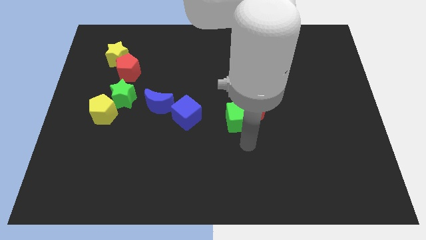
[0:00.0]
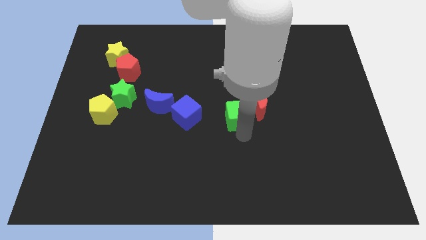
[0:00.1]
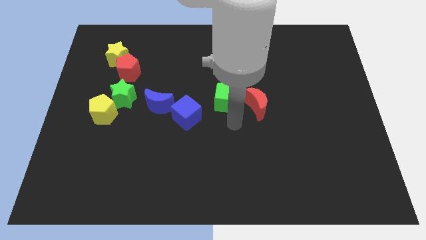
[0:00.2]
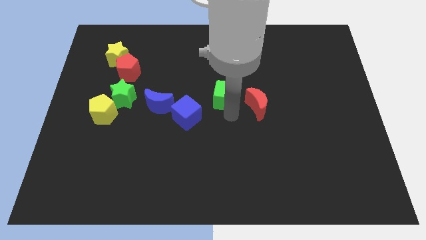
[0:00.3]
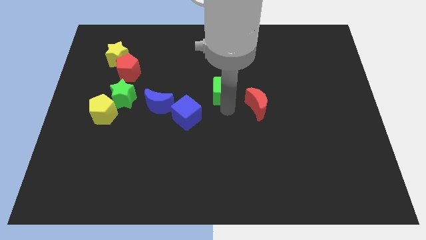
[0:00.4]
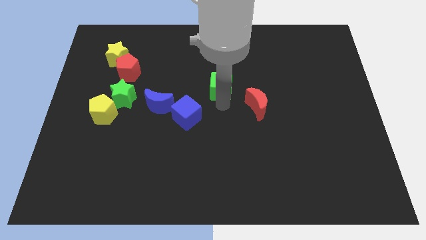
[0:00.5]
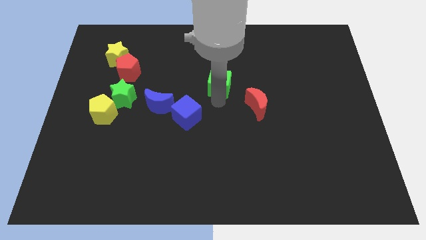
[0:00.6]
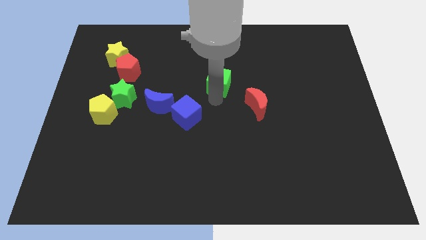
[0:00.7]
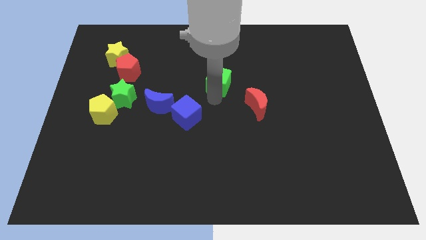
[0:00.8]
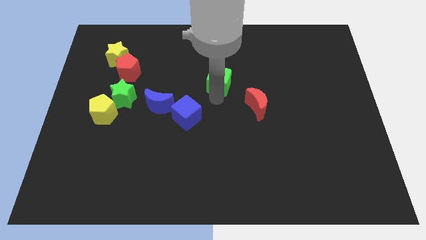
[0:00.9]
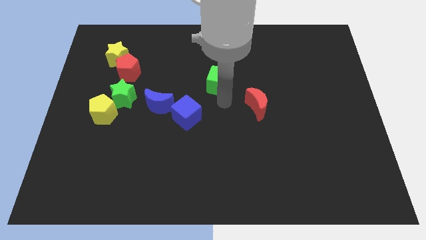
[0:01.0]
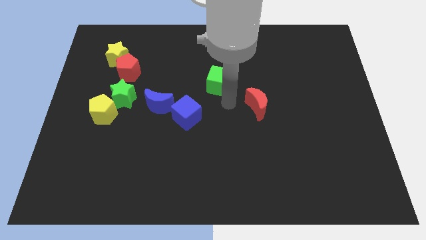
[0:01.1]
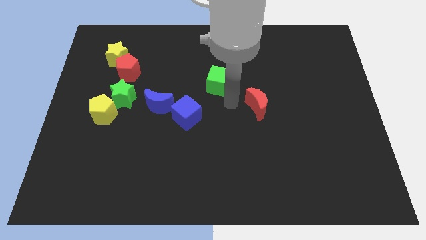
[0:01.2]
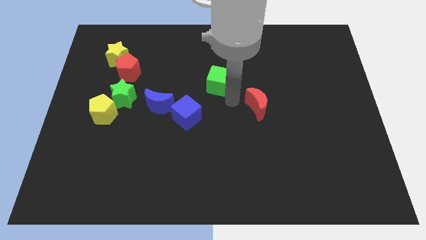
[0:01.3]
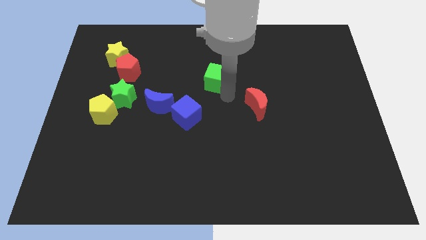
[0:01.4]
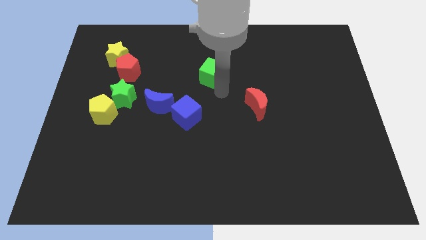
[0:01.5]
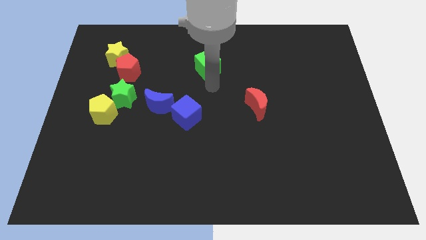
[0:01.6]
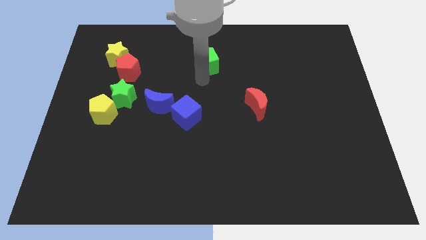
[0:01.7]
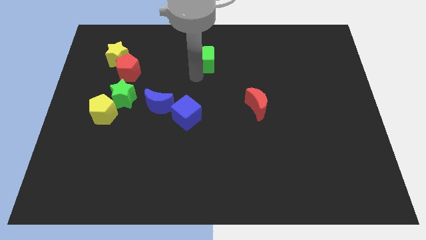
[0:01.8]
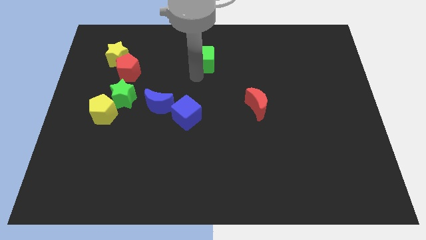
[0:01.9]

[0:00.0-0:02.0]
push the green cube to the top

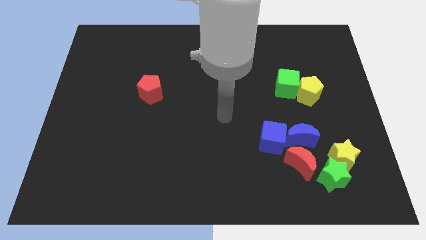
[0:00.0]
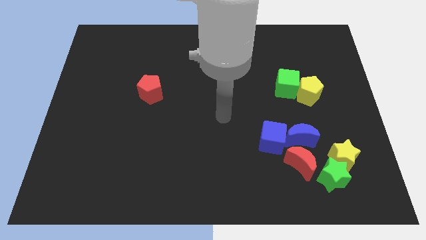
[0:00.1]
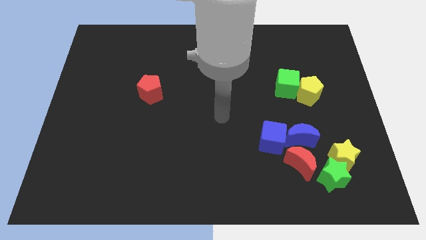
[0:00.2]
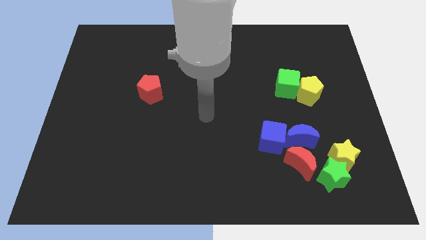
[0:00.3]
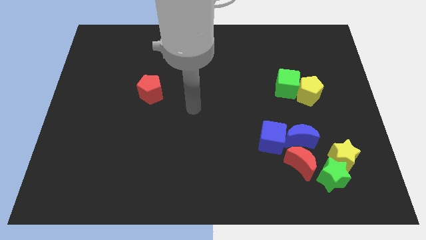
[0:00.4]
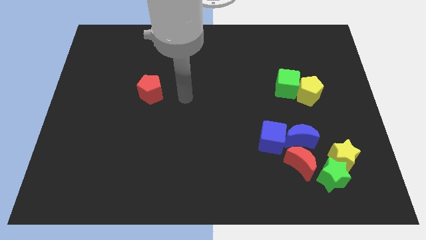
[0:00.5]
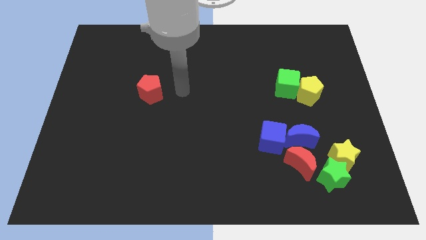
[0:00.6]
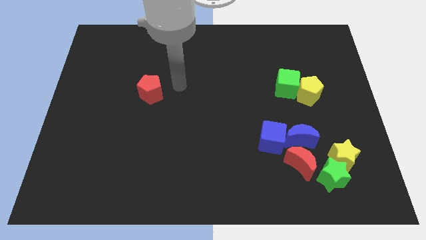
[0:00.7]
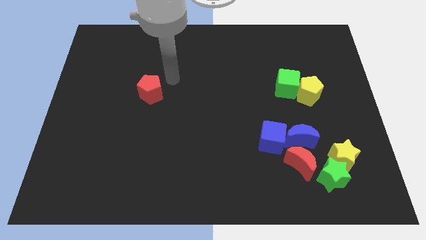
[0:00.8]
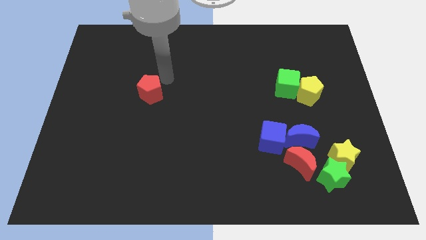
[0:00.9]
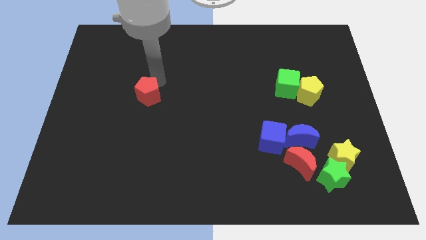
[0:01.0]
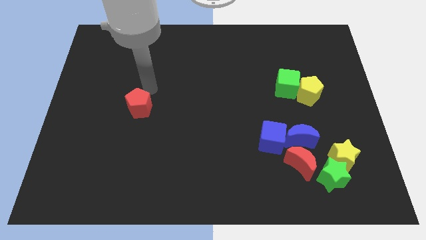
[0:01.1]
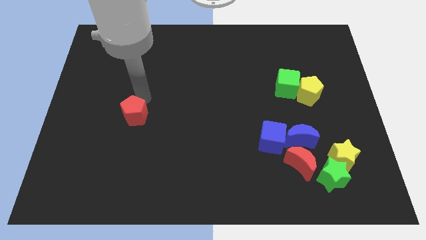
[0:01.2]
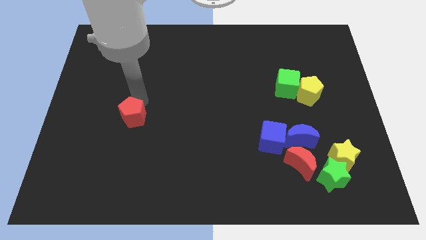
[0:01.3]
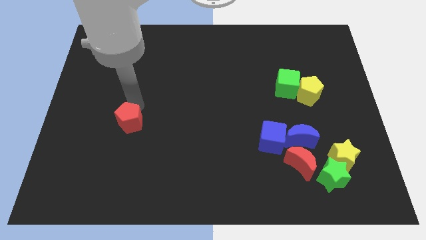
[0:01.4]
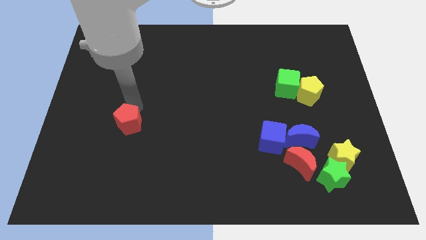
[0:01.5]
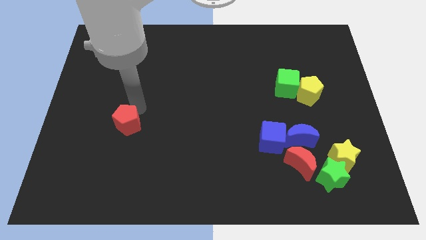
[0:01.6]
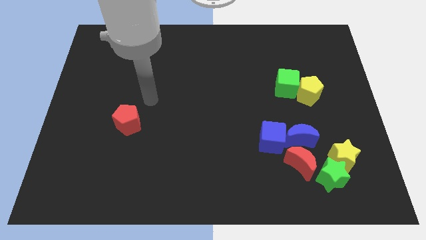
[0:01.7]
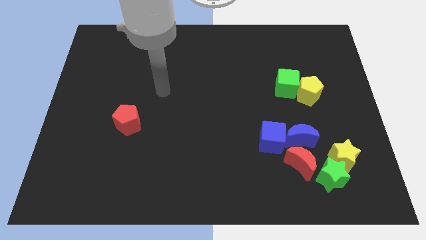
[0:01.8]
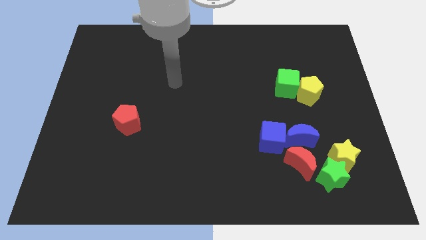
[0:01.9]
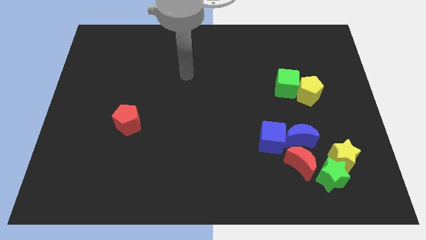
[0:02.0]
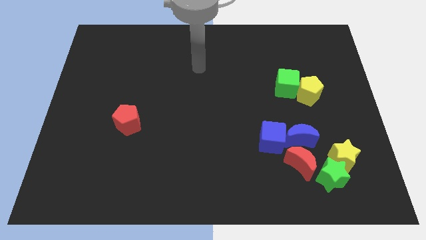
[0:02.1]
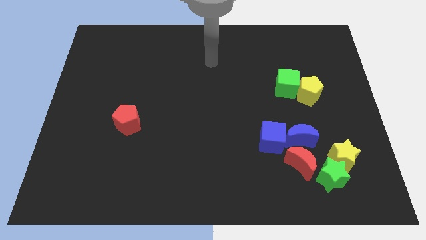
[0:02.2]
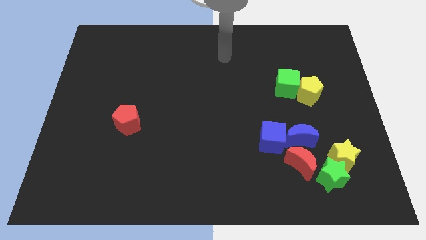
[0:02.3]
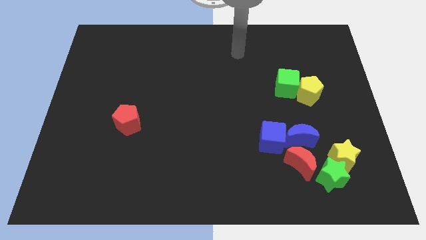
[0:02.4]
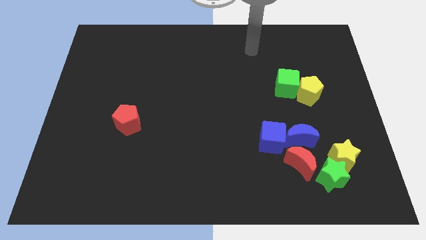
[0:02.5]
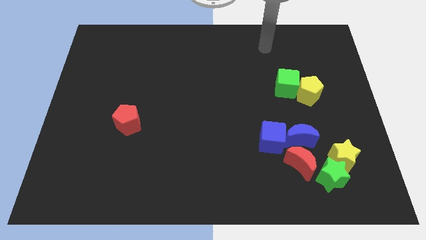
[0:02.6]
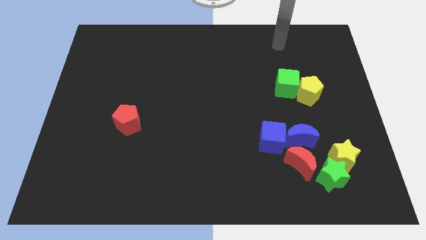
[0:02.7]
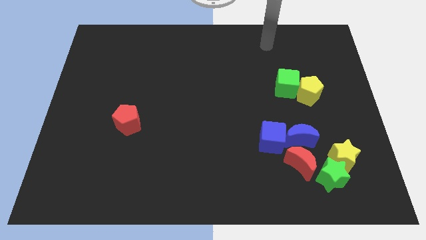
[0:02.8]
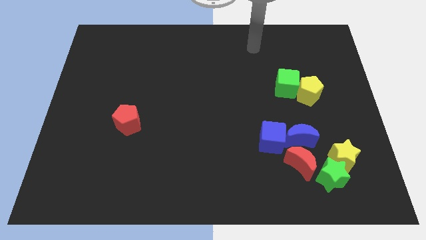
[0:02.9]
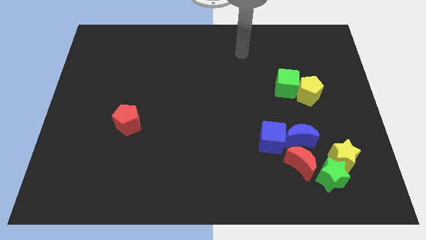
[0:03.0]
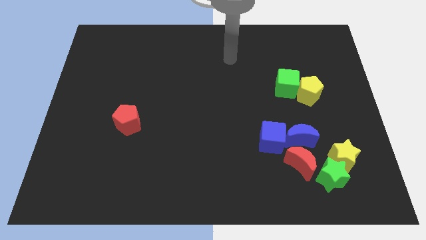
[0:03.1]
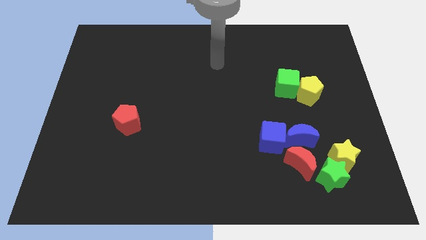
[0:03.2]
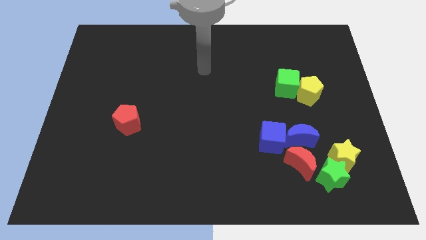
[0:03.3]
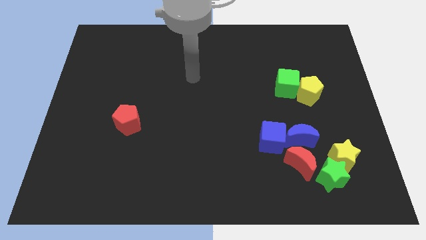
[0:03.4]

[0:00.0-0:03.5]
place the red pentagon left to the blue cube

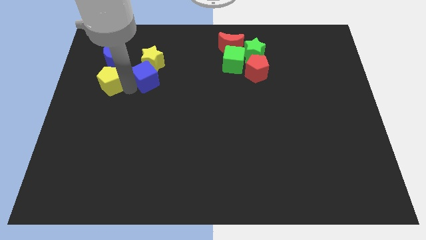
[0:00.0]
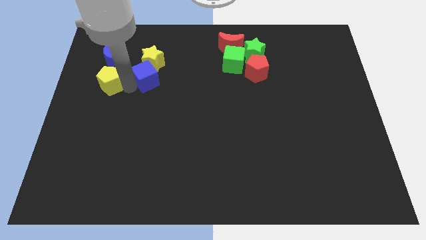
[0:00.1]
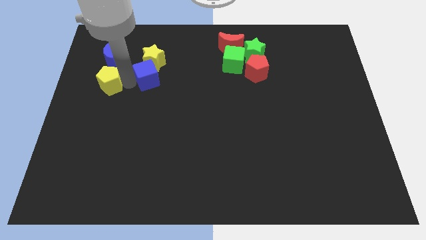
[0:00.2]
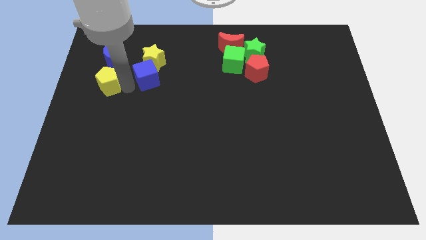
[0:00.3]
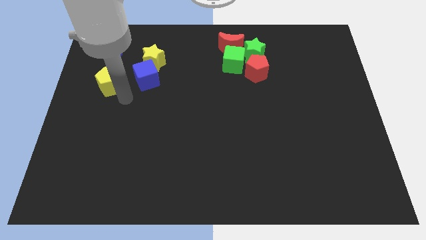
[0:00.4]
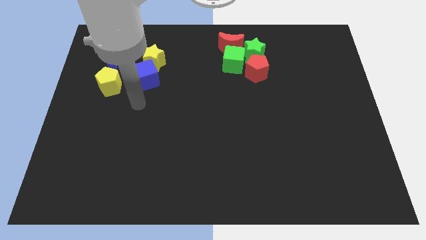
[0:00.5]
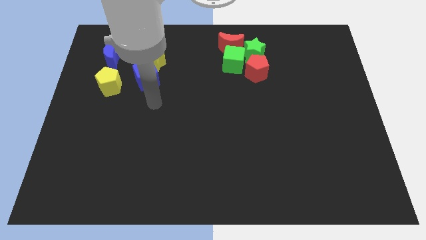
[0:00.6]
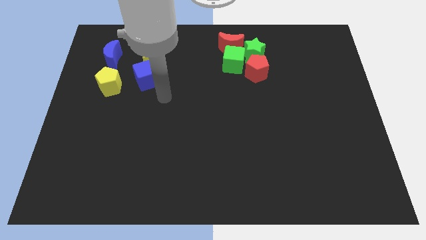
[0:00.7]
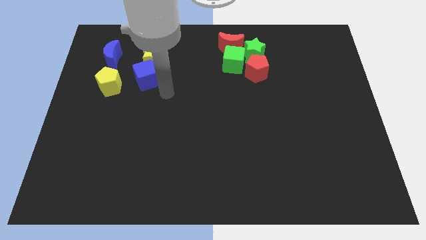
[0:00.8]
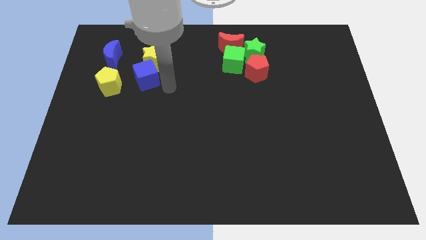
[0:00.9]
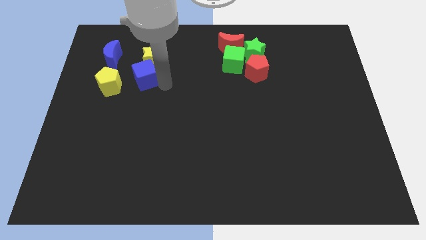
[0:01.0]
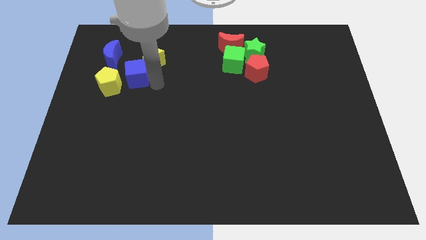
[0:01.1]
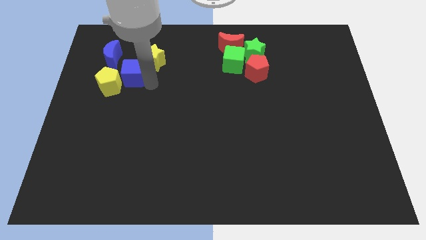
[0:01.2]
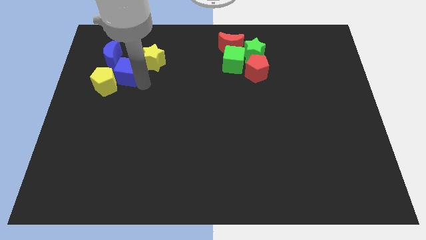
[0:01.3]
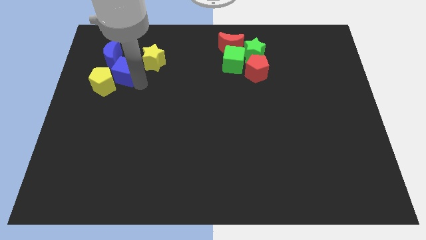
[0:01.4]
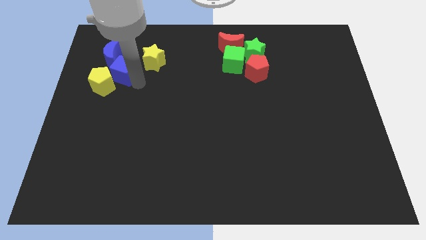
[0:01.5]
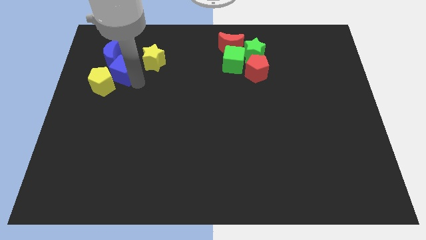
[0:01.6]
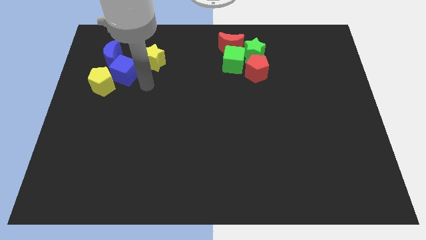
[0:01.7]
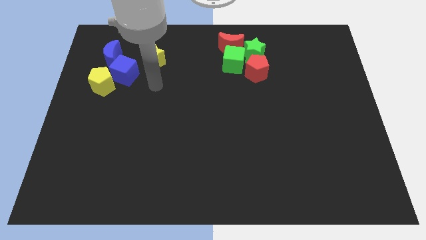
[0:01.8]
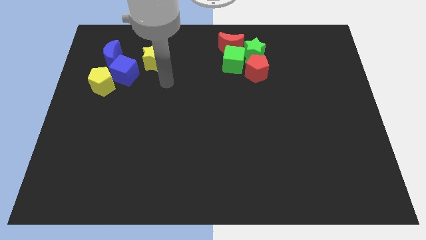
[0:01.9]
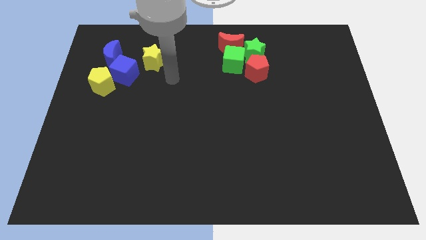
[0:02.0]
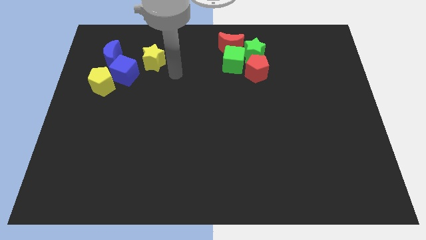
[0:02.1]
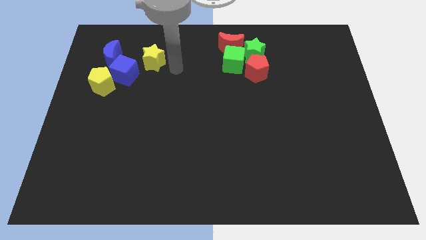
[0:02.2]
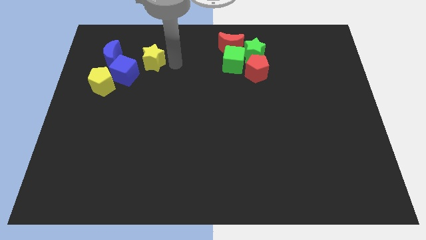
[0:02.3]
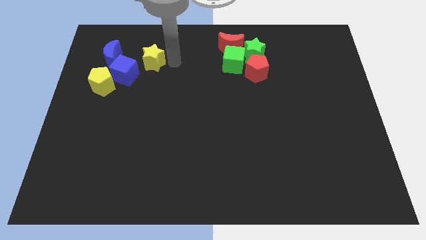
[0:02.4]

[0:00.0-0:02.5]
push the blue cube into the blue moon

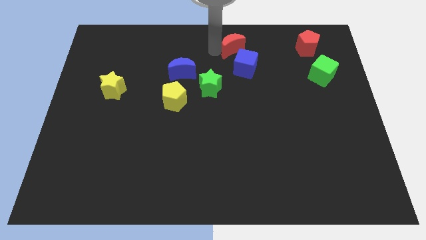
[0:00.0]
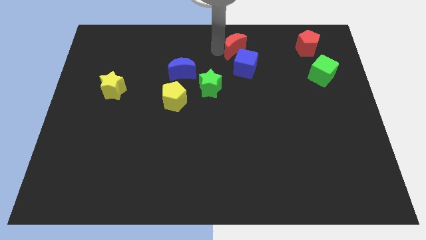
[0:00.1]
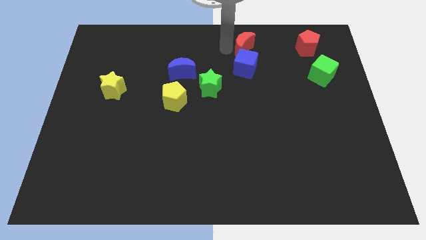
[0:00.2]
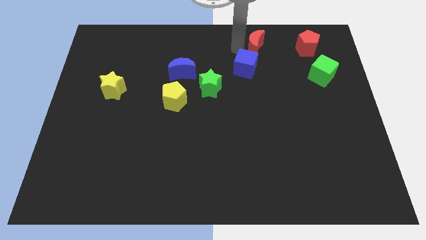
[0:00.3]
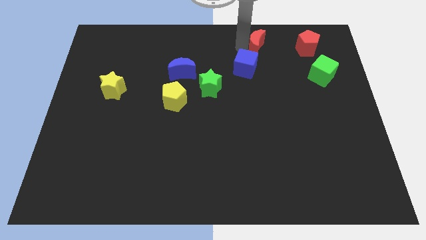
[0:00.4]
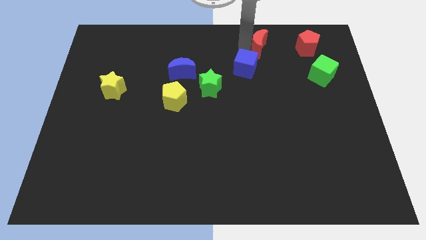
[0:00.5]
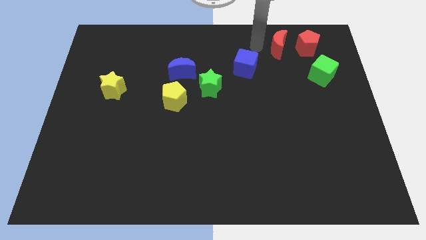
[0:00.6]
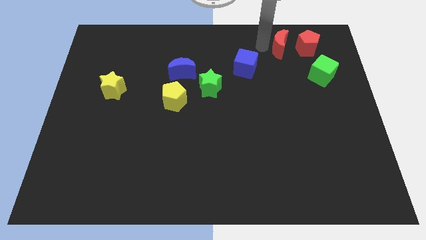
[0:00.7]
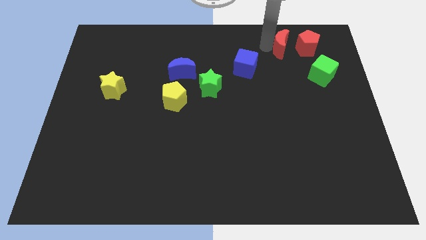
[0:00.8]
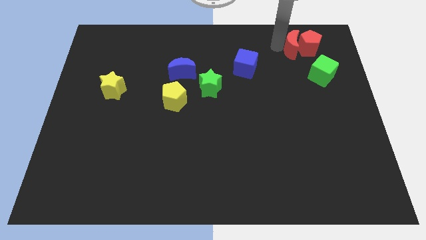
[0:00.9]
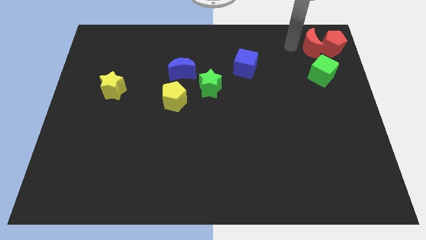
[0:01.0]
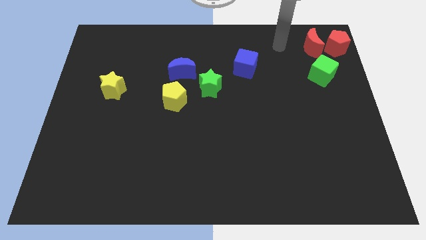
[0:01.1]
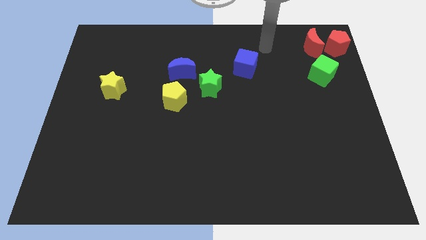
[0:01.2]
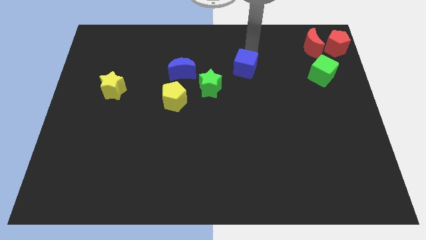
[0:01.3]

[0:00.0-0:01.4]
push red moon into red pentagon
